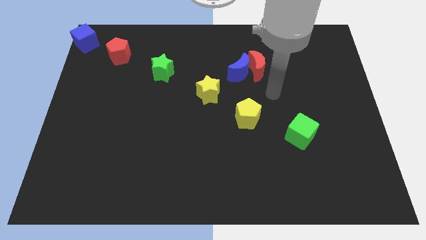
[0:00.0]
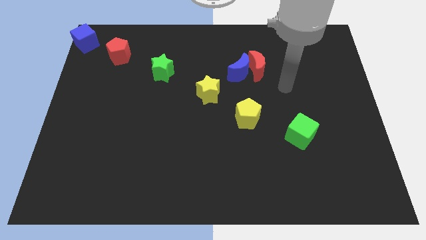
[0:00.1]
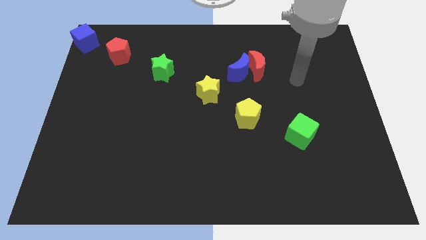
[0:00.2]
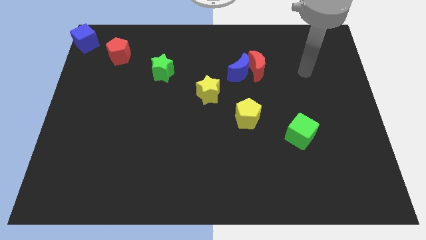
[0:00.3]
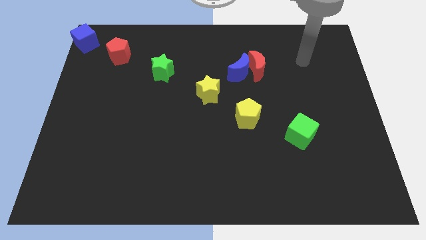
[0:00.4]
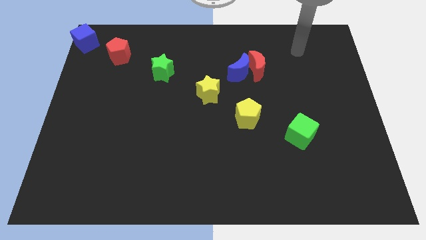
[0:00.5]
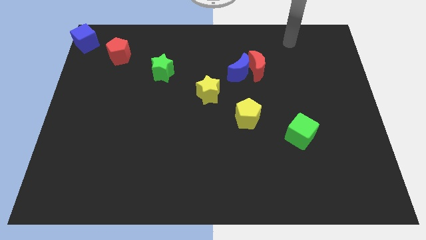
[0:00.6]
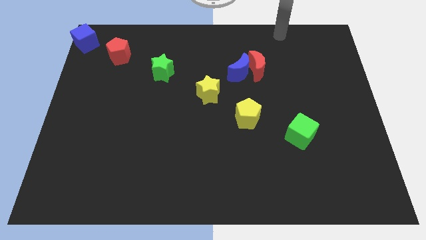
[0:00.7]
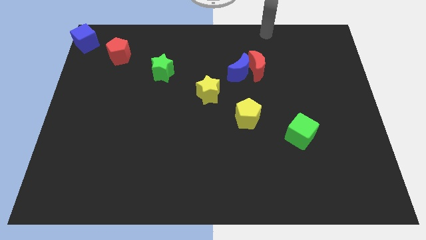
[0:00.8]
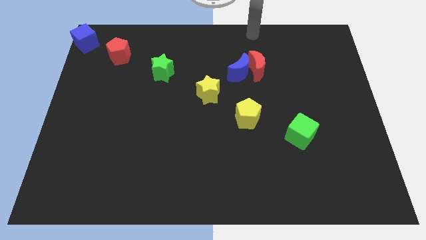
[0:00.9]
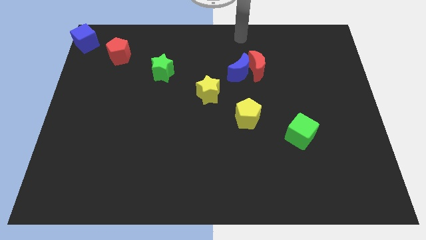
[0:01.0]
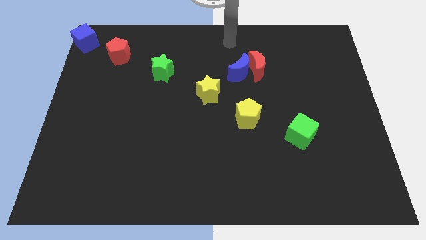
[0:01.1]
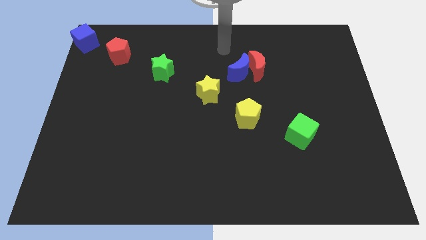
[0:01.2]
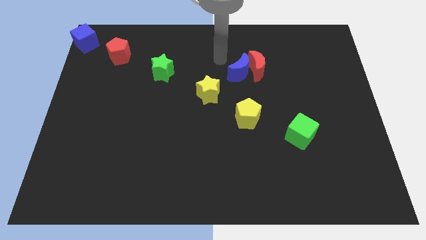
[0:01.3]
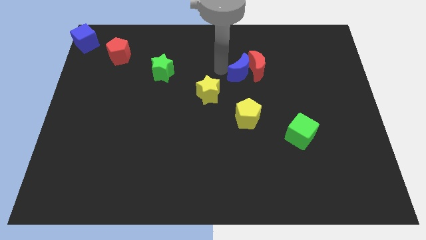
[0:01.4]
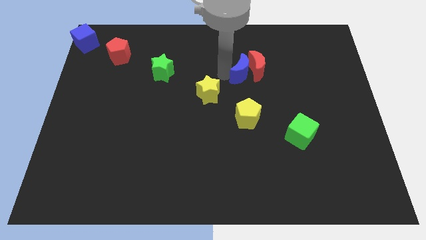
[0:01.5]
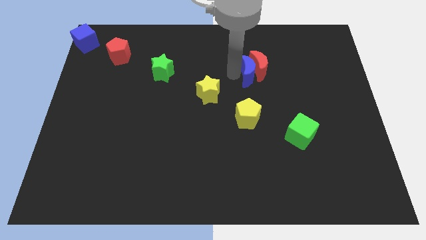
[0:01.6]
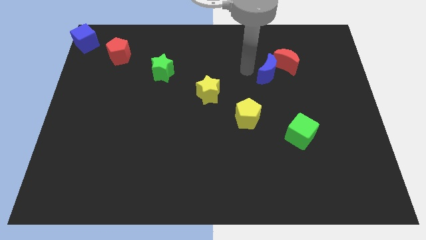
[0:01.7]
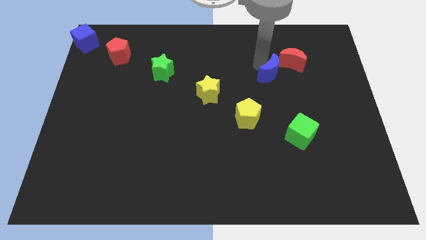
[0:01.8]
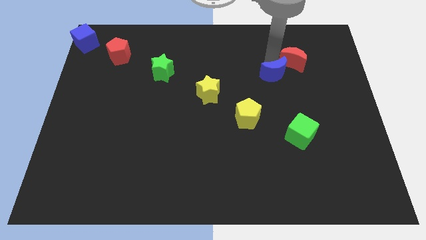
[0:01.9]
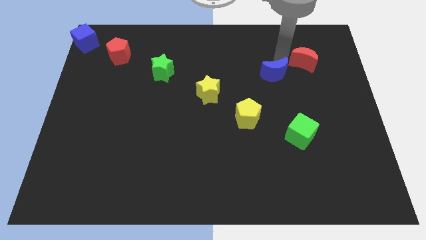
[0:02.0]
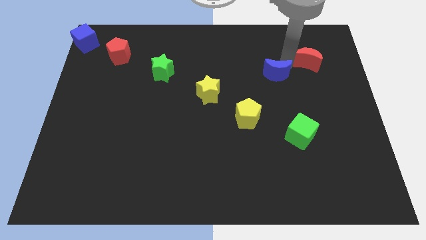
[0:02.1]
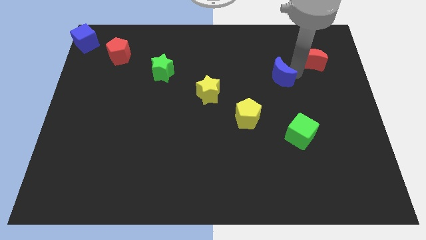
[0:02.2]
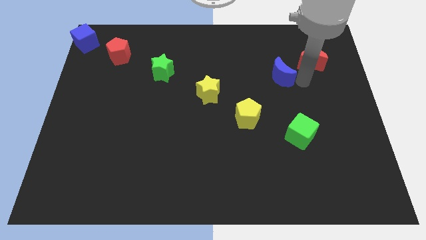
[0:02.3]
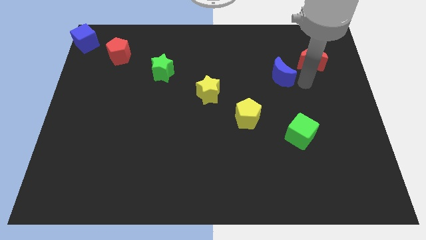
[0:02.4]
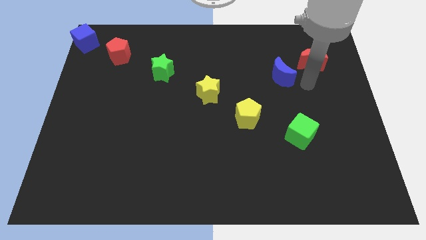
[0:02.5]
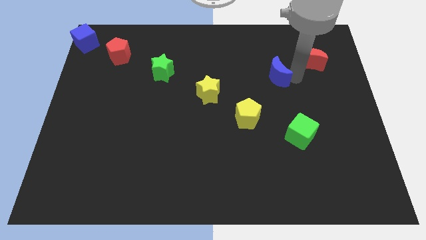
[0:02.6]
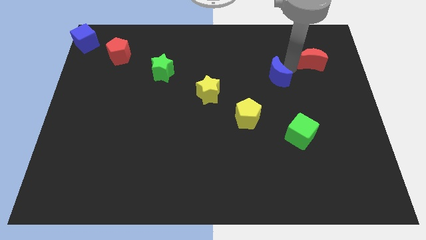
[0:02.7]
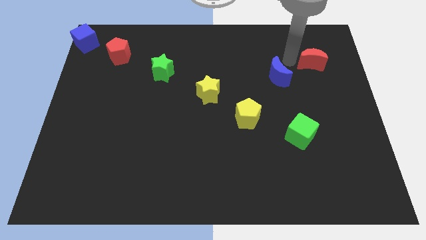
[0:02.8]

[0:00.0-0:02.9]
push the blue crescent to the left of the board

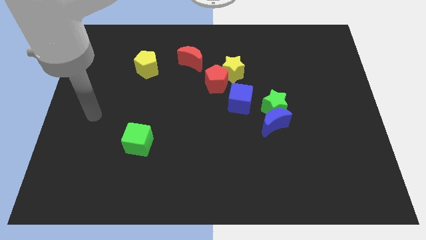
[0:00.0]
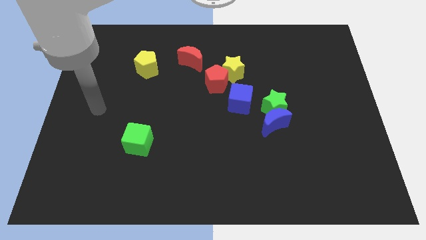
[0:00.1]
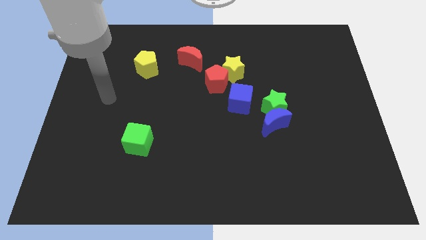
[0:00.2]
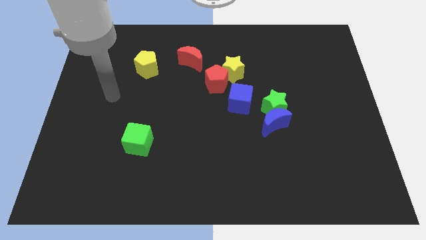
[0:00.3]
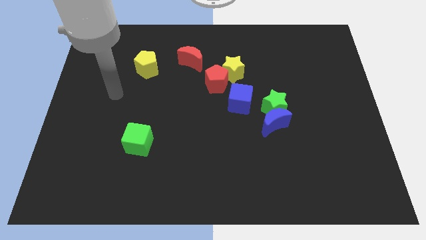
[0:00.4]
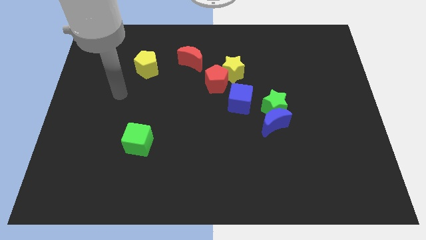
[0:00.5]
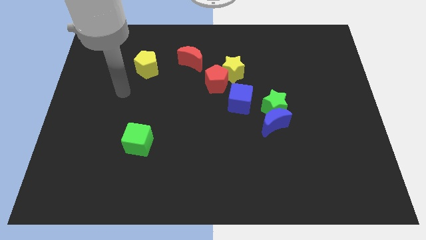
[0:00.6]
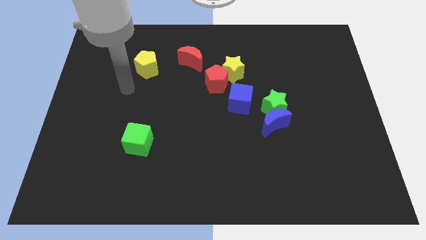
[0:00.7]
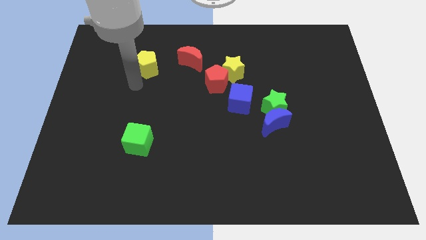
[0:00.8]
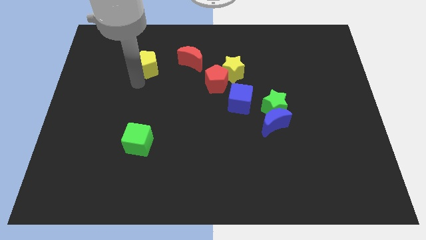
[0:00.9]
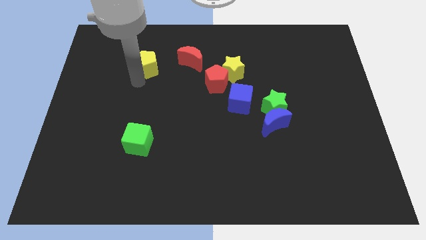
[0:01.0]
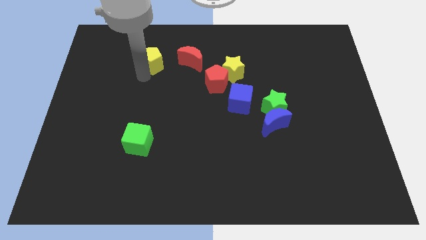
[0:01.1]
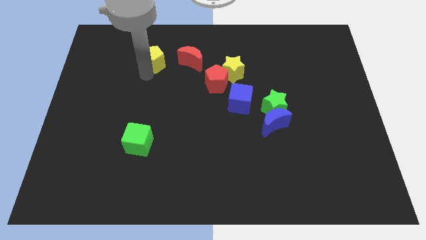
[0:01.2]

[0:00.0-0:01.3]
touch the bottom side of the yellow pentagon

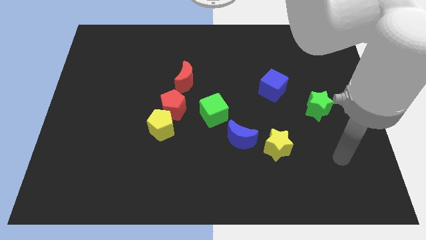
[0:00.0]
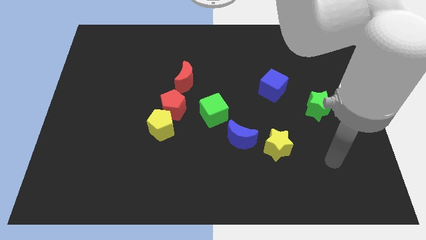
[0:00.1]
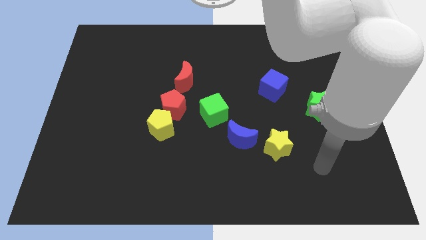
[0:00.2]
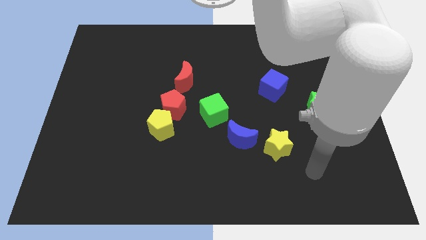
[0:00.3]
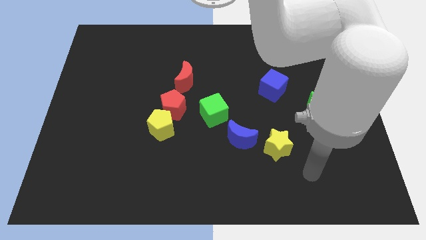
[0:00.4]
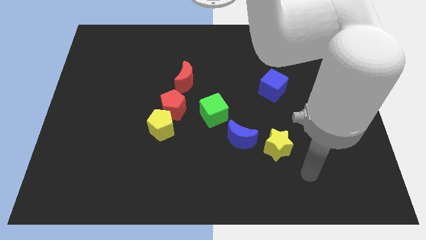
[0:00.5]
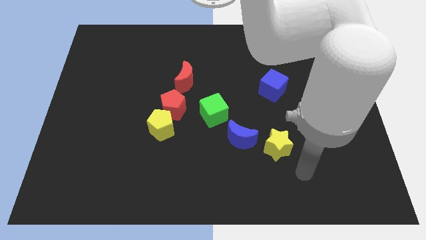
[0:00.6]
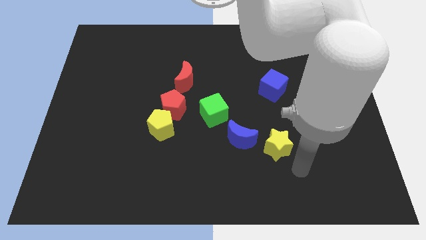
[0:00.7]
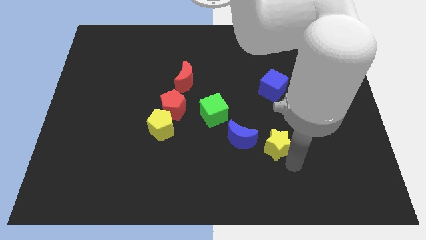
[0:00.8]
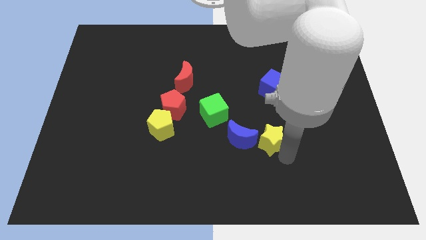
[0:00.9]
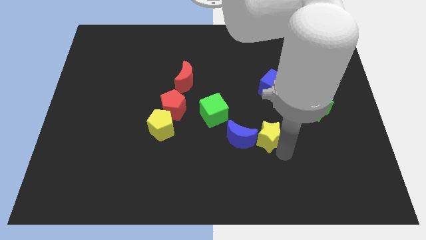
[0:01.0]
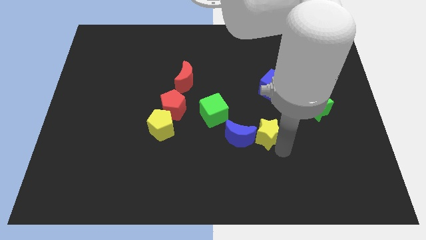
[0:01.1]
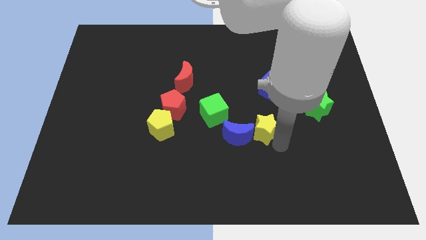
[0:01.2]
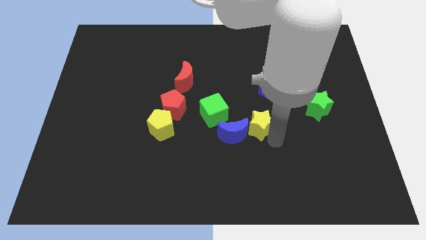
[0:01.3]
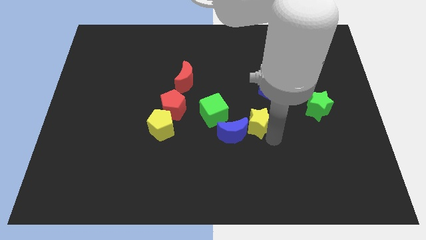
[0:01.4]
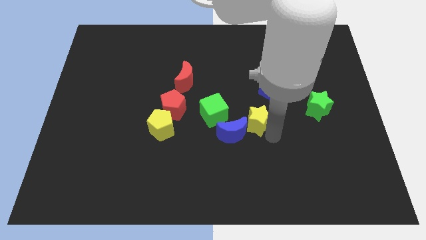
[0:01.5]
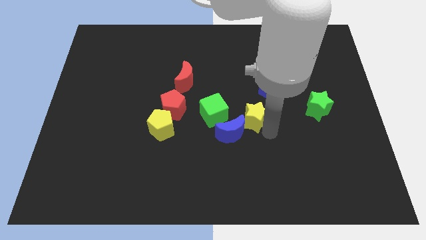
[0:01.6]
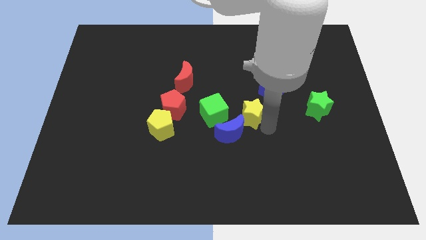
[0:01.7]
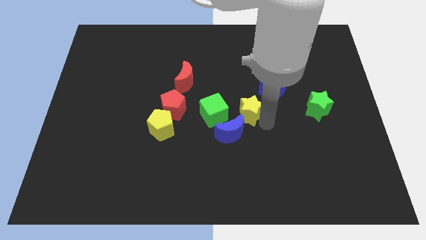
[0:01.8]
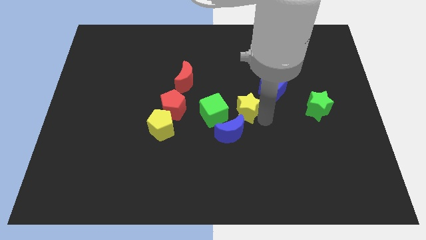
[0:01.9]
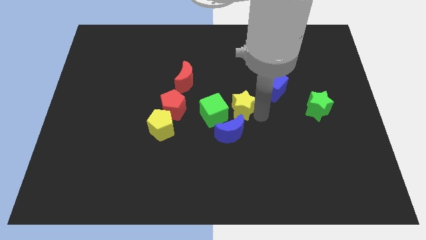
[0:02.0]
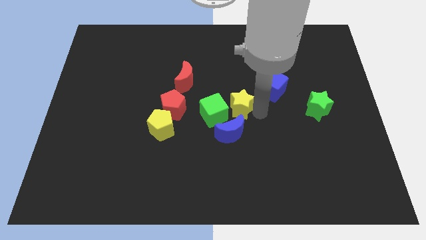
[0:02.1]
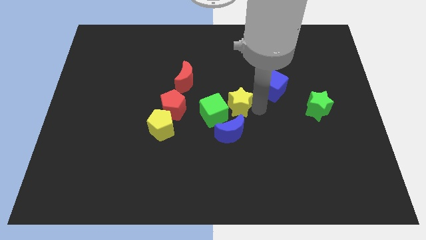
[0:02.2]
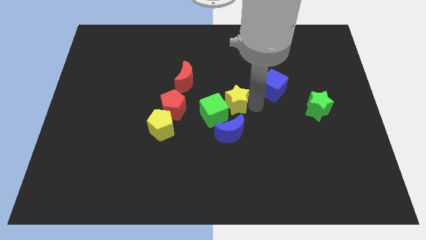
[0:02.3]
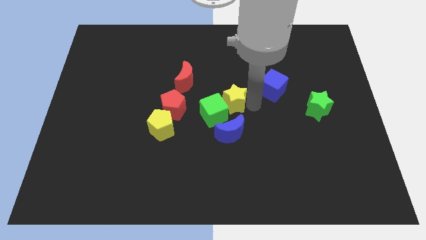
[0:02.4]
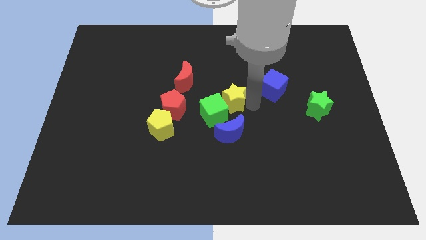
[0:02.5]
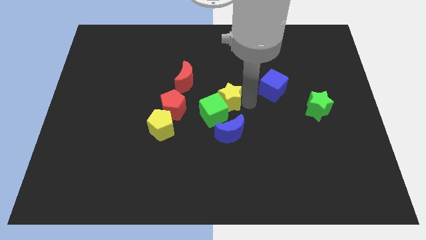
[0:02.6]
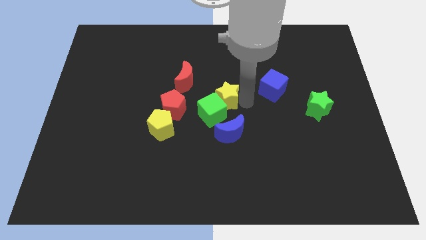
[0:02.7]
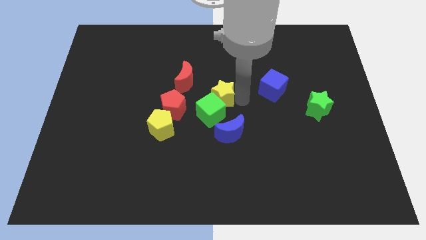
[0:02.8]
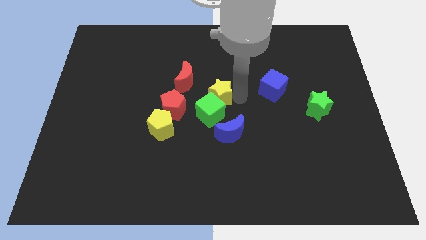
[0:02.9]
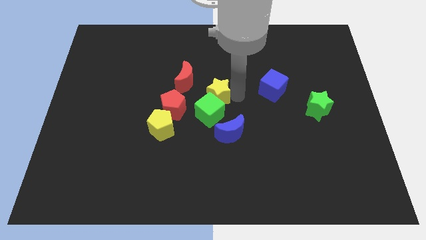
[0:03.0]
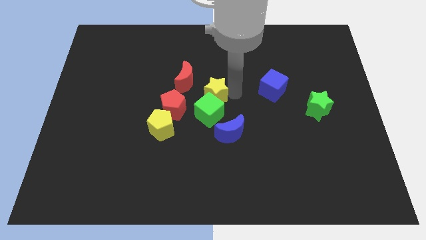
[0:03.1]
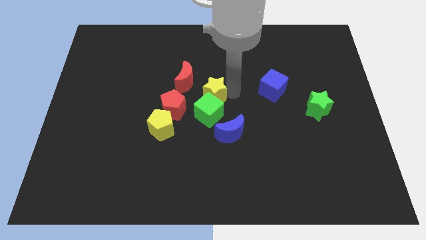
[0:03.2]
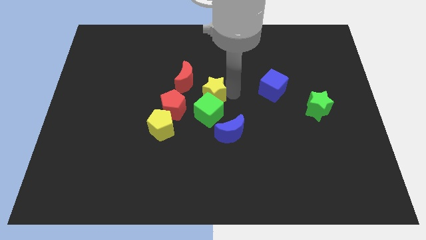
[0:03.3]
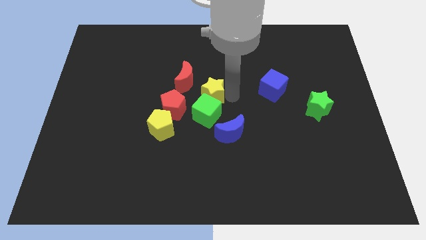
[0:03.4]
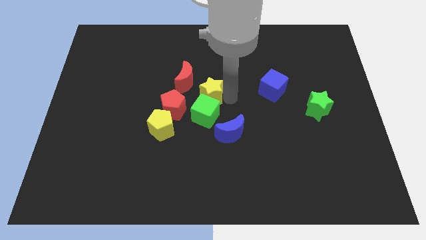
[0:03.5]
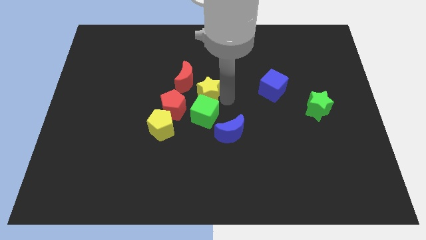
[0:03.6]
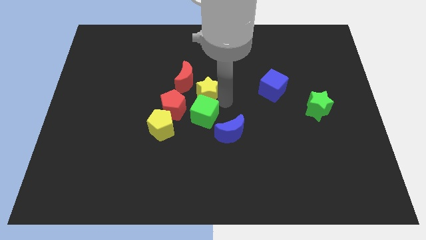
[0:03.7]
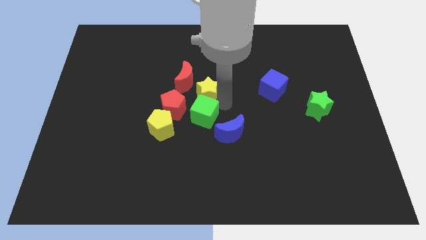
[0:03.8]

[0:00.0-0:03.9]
move yellow star above the green cube

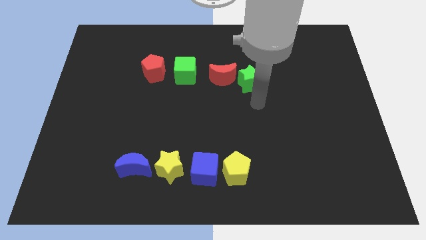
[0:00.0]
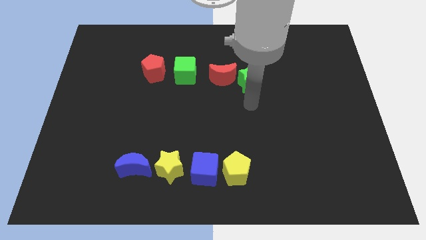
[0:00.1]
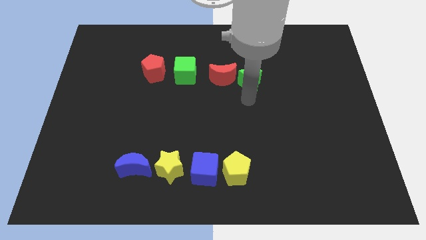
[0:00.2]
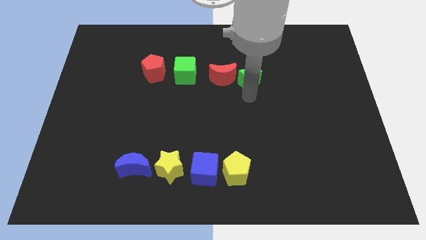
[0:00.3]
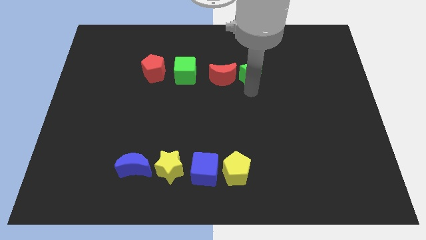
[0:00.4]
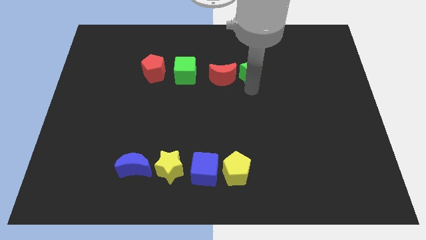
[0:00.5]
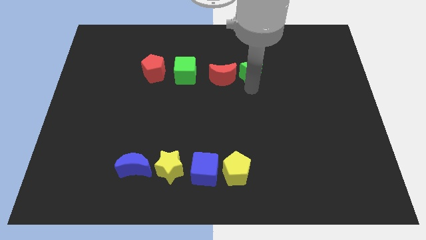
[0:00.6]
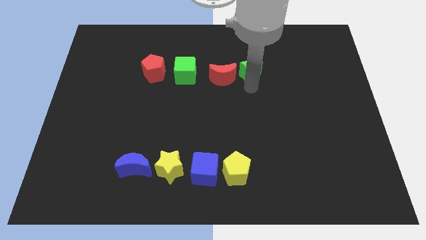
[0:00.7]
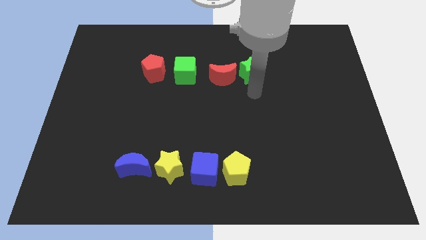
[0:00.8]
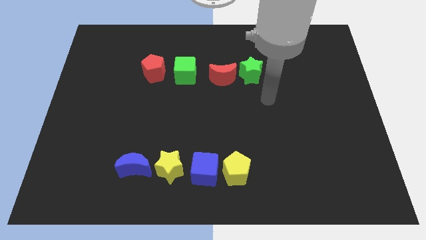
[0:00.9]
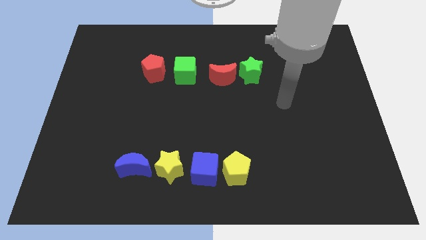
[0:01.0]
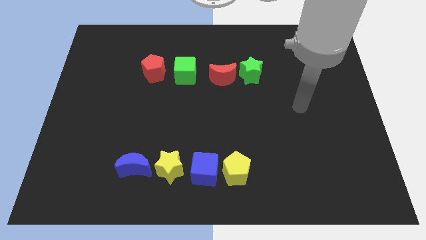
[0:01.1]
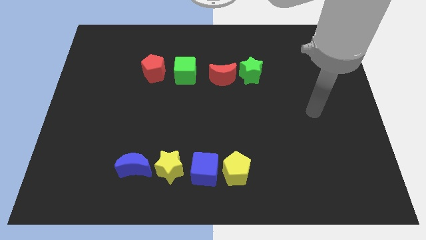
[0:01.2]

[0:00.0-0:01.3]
slightly push the green star a bit up
